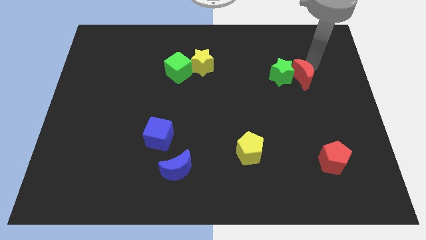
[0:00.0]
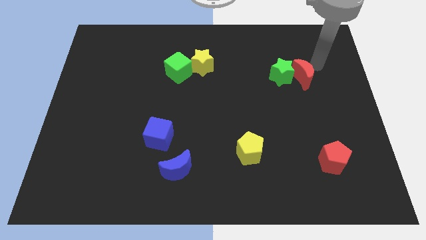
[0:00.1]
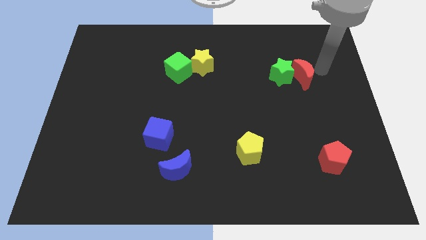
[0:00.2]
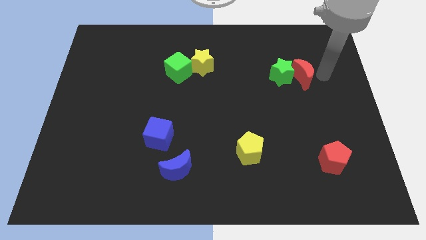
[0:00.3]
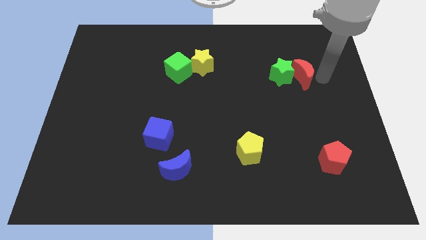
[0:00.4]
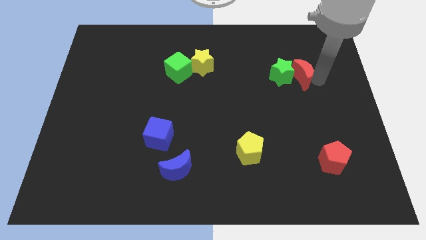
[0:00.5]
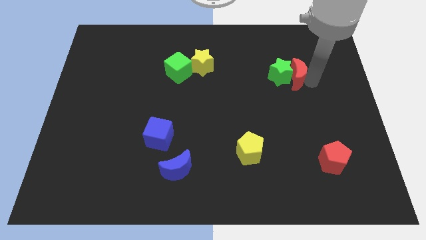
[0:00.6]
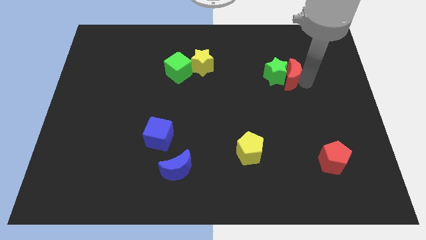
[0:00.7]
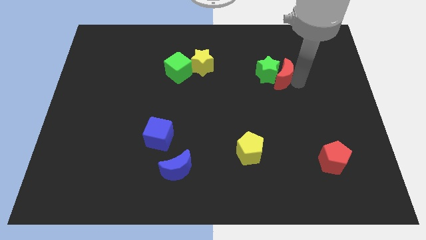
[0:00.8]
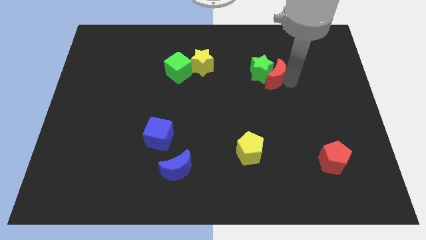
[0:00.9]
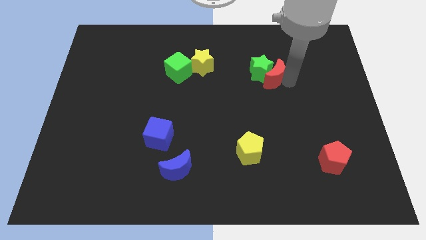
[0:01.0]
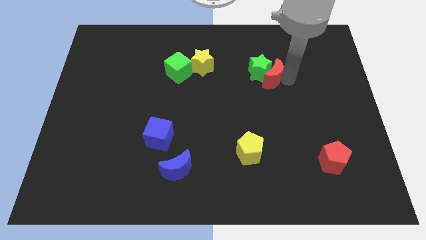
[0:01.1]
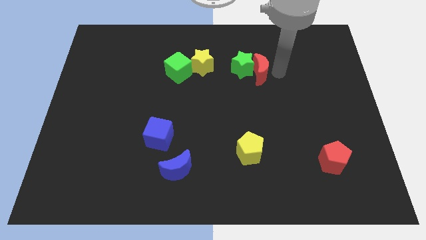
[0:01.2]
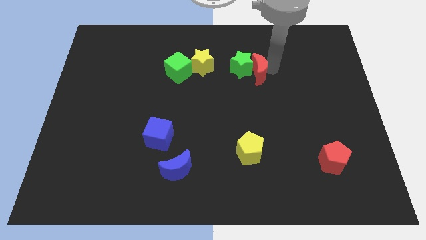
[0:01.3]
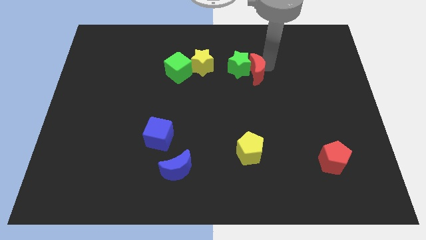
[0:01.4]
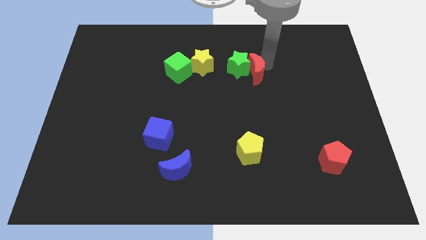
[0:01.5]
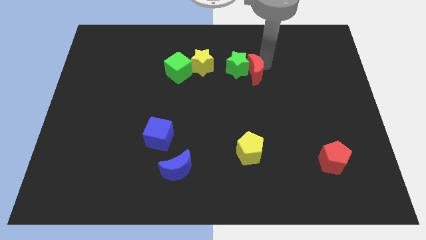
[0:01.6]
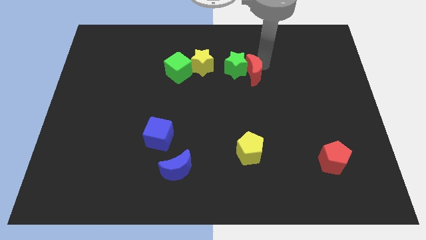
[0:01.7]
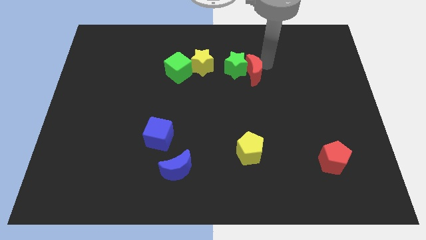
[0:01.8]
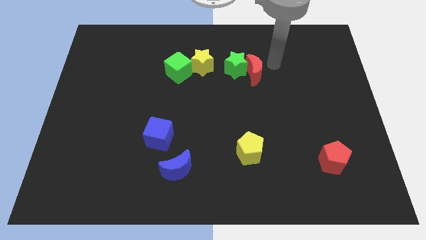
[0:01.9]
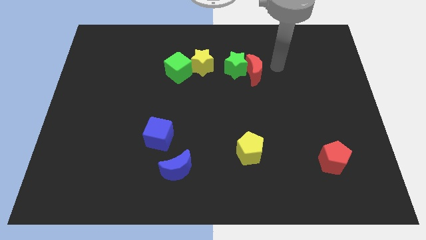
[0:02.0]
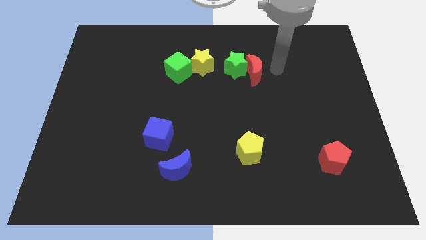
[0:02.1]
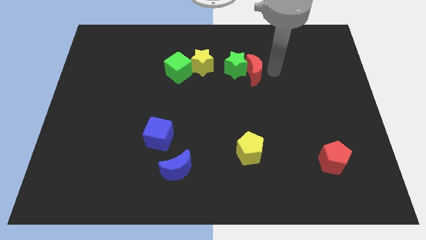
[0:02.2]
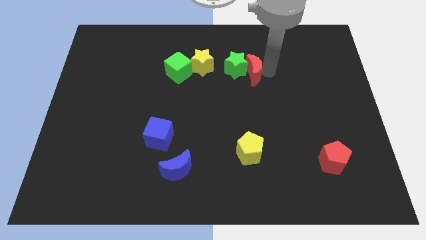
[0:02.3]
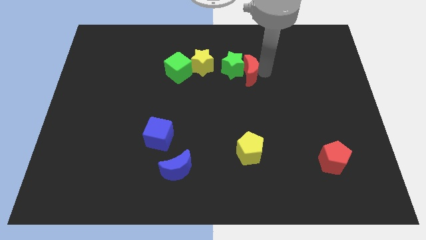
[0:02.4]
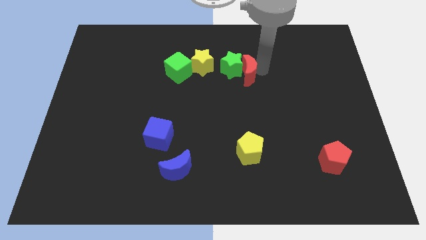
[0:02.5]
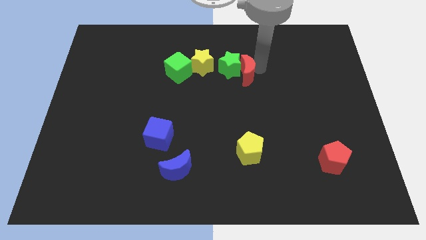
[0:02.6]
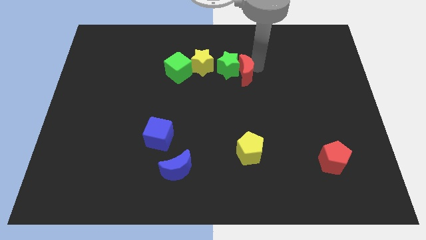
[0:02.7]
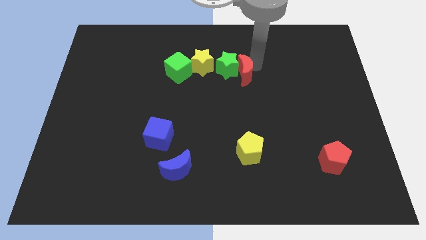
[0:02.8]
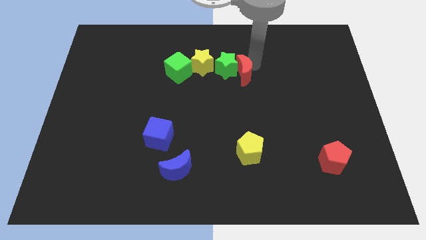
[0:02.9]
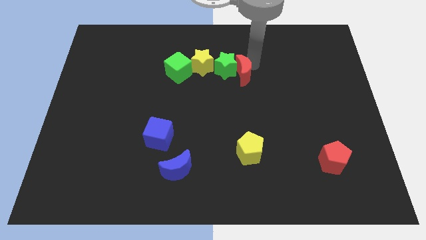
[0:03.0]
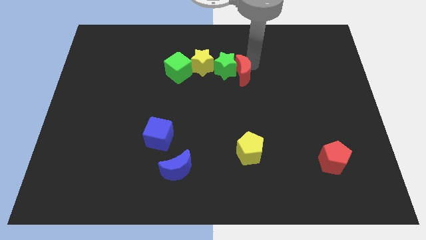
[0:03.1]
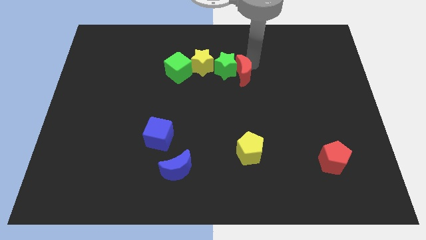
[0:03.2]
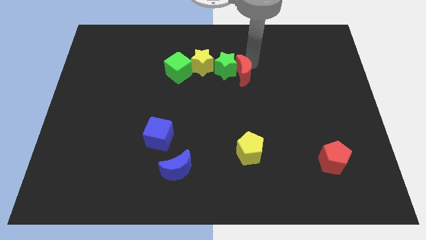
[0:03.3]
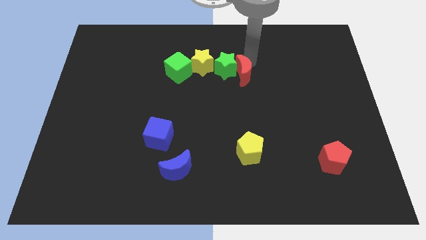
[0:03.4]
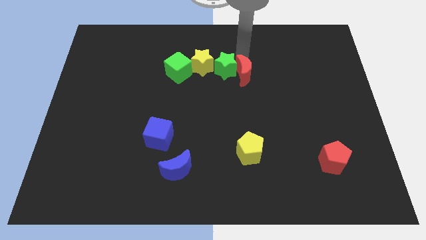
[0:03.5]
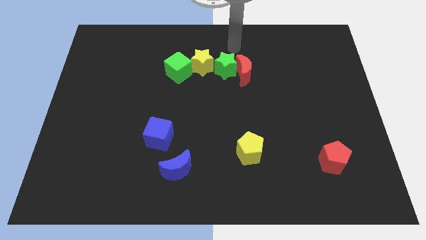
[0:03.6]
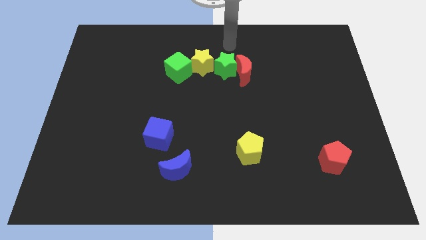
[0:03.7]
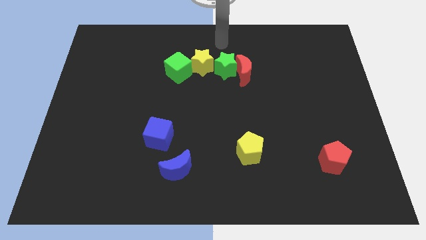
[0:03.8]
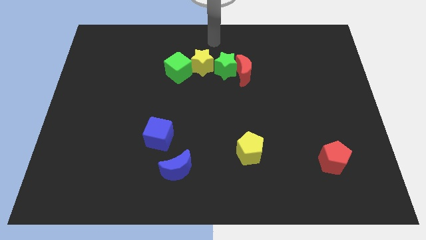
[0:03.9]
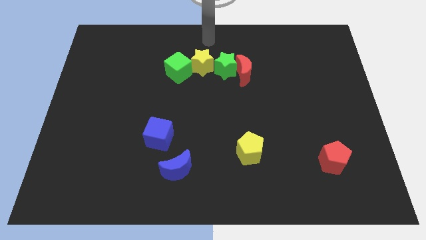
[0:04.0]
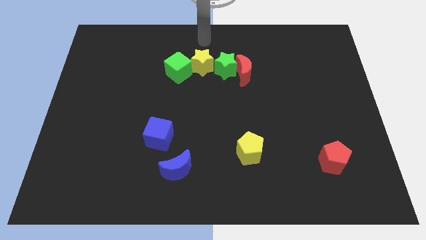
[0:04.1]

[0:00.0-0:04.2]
move the green star and red crescent right to the yellow star

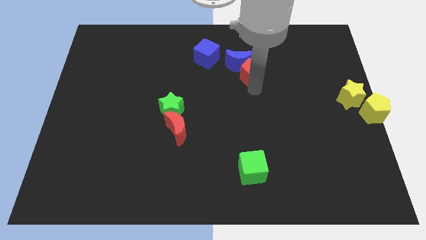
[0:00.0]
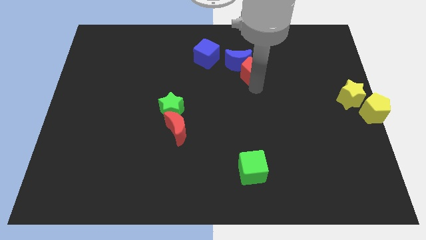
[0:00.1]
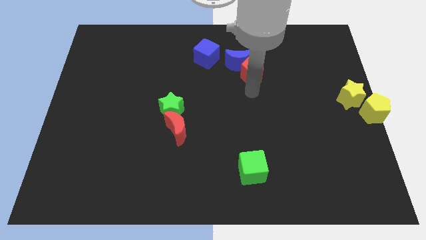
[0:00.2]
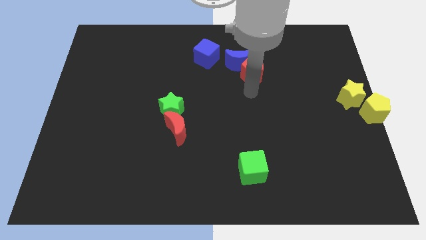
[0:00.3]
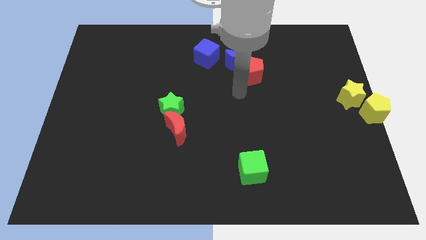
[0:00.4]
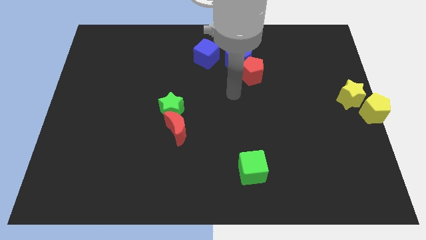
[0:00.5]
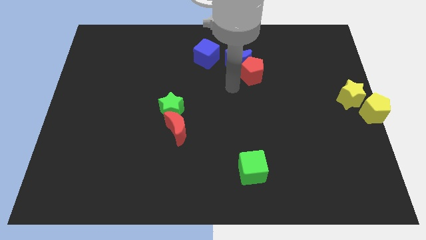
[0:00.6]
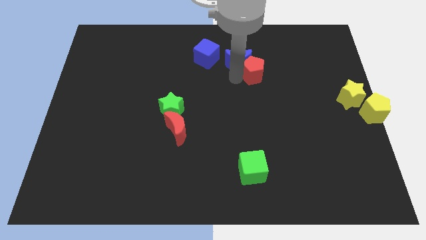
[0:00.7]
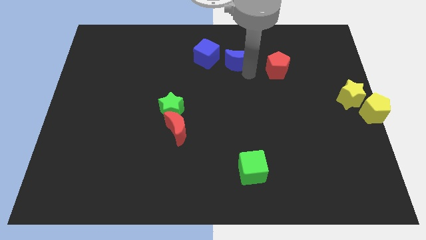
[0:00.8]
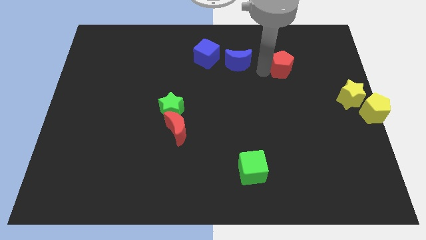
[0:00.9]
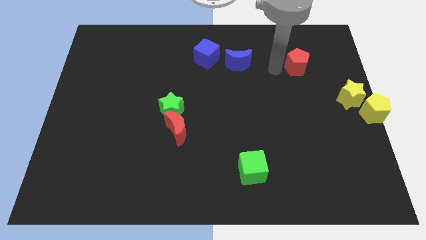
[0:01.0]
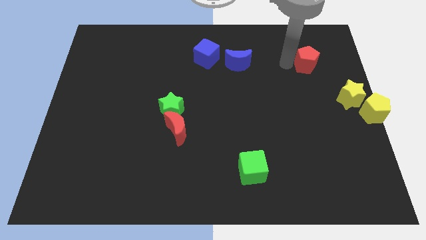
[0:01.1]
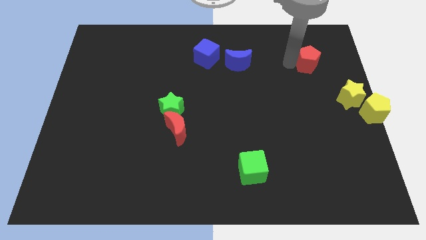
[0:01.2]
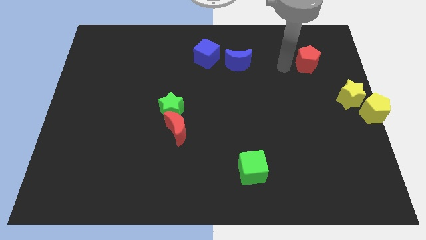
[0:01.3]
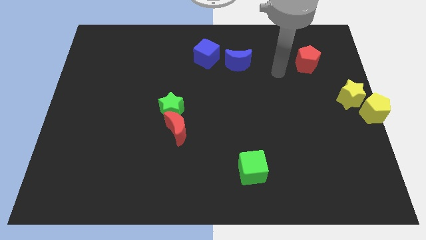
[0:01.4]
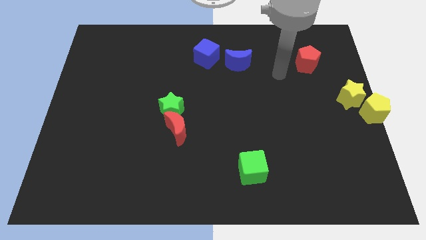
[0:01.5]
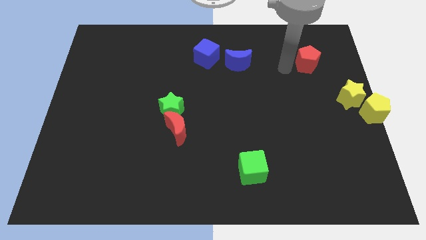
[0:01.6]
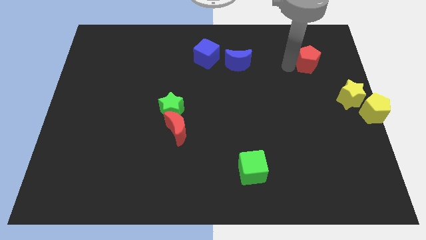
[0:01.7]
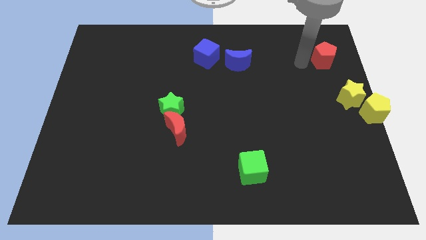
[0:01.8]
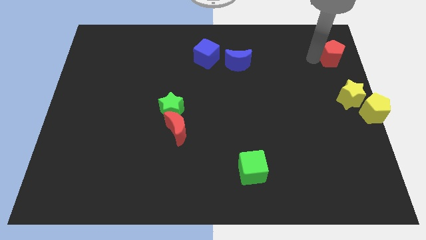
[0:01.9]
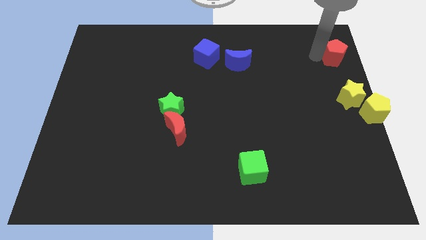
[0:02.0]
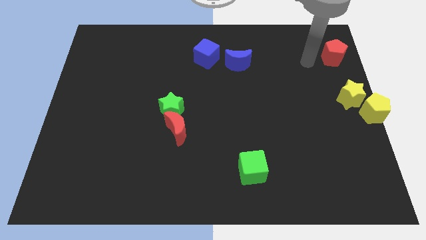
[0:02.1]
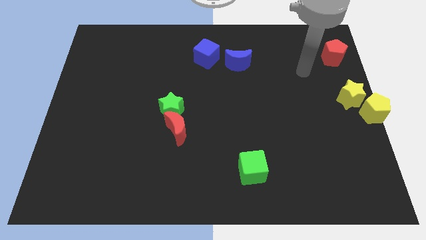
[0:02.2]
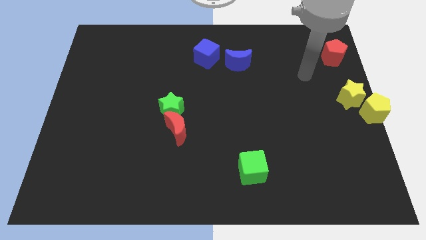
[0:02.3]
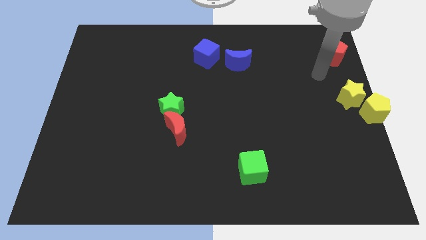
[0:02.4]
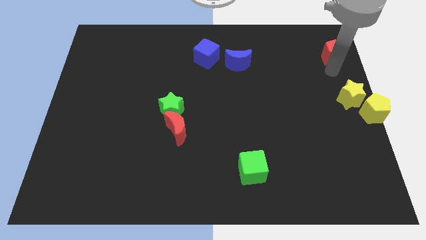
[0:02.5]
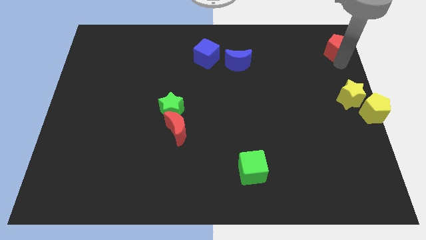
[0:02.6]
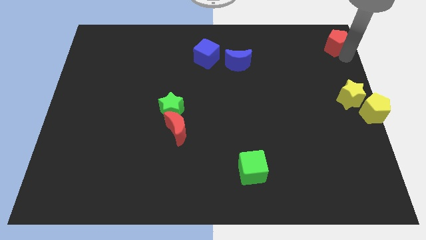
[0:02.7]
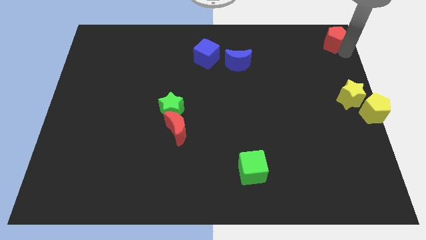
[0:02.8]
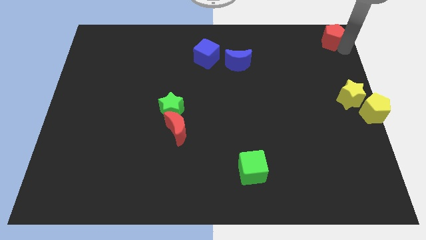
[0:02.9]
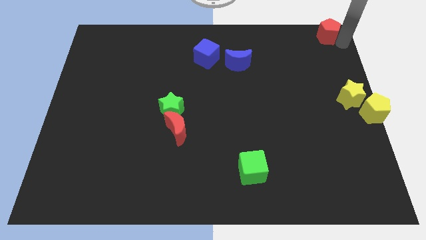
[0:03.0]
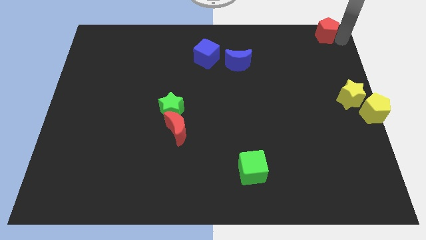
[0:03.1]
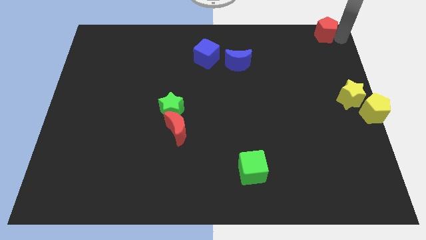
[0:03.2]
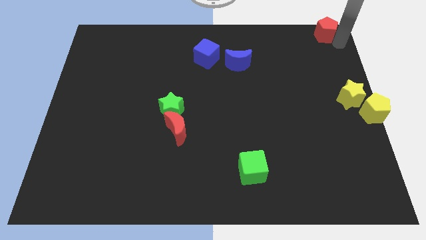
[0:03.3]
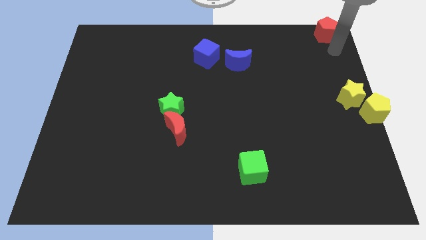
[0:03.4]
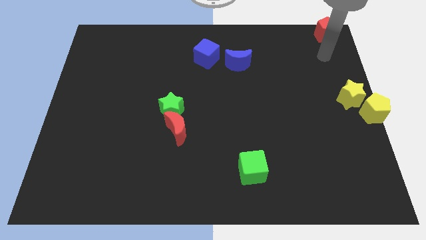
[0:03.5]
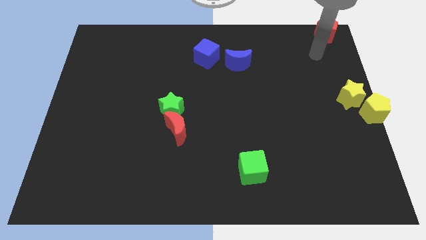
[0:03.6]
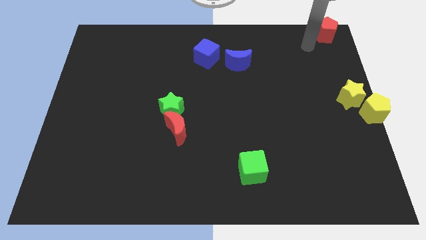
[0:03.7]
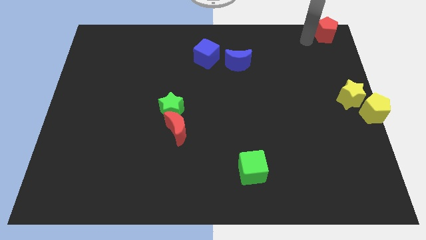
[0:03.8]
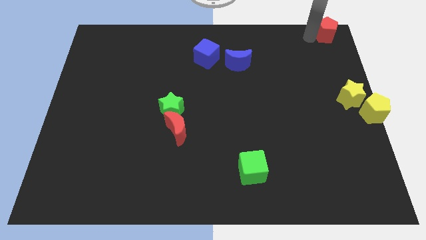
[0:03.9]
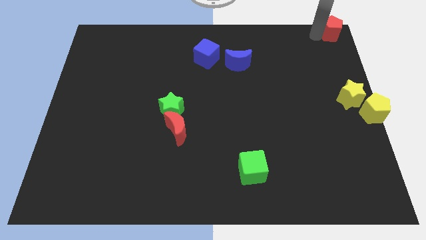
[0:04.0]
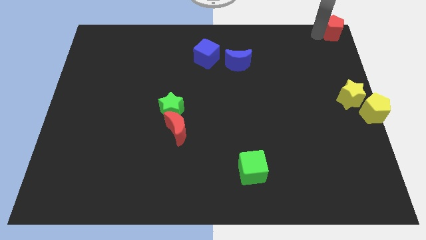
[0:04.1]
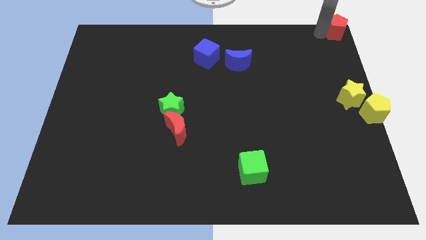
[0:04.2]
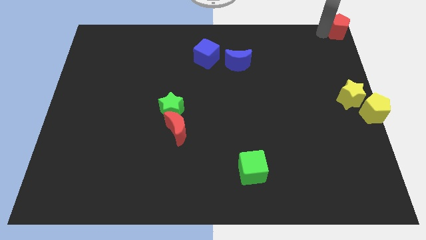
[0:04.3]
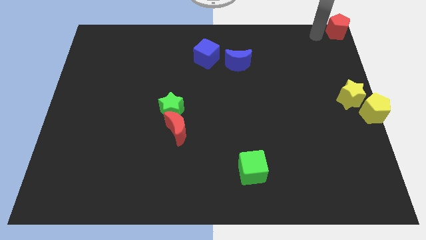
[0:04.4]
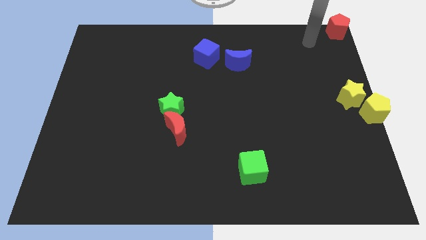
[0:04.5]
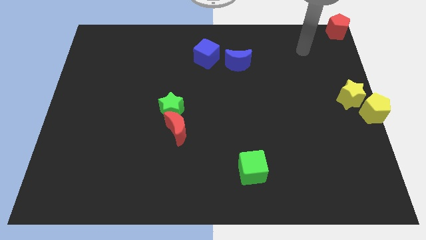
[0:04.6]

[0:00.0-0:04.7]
place the red pentagon at the top right corner of the board
